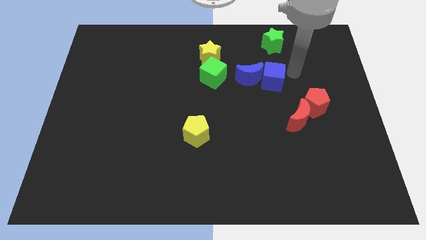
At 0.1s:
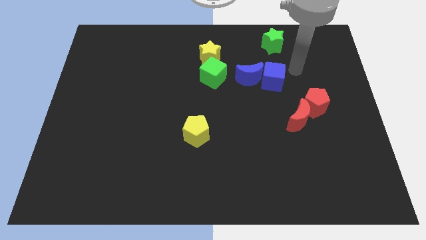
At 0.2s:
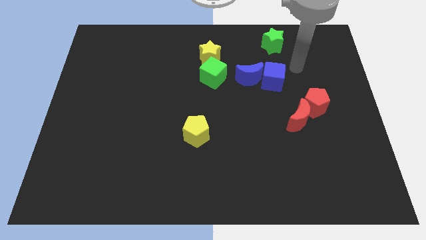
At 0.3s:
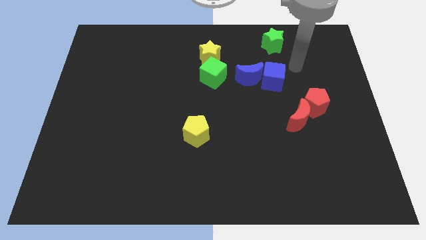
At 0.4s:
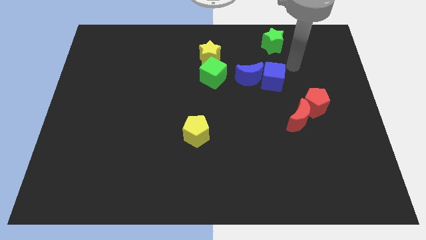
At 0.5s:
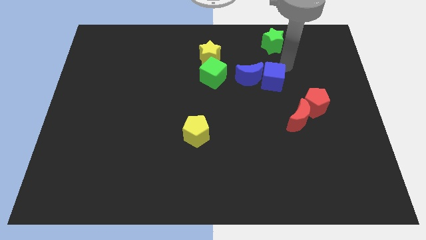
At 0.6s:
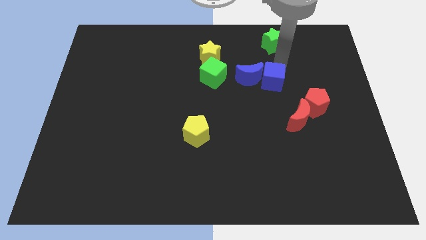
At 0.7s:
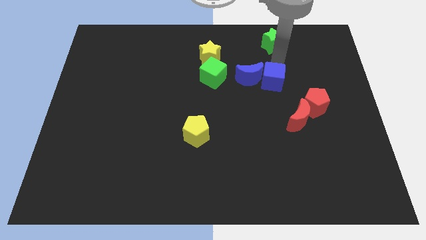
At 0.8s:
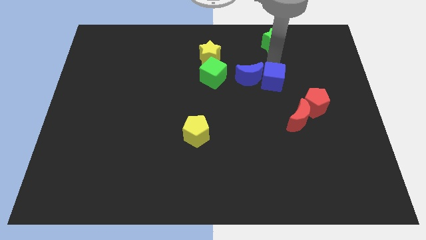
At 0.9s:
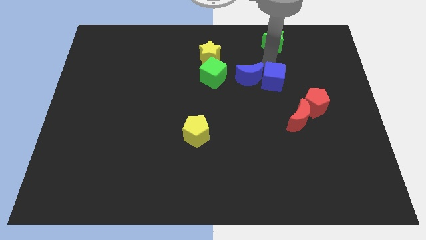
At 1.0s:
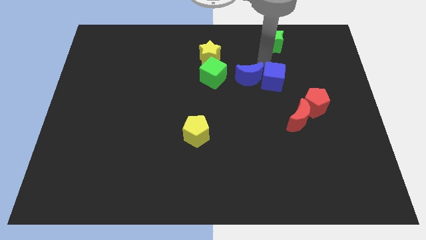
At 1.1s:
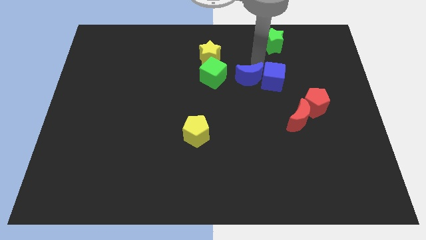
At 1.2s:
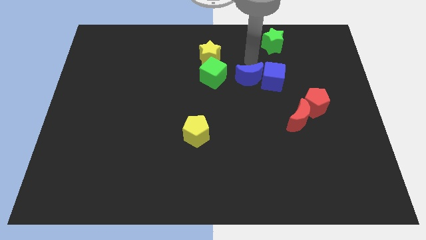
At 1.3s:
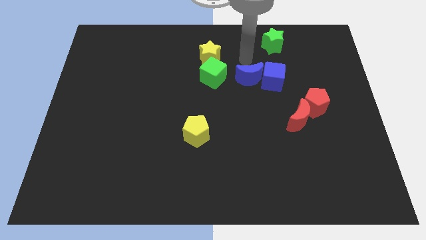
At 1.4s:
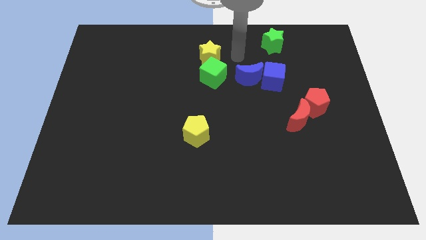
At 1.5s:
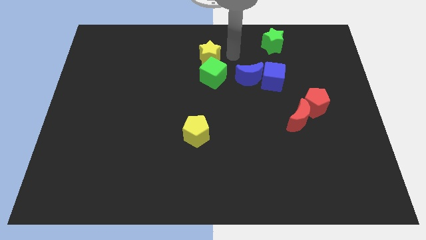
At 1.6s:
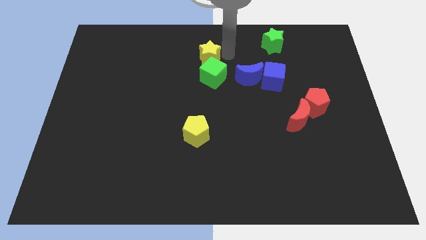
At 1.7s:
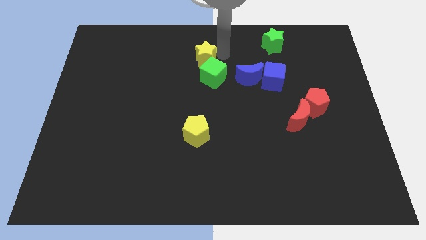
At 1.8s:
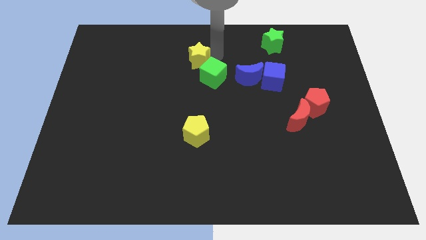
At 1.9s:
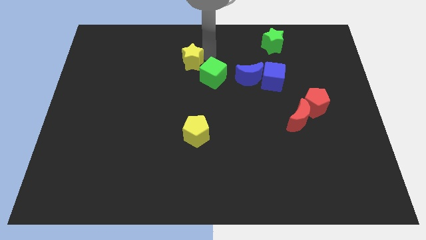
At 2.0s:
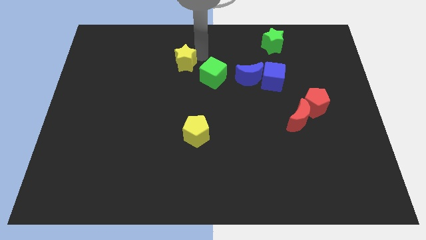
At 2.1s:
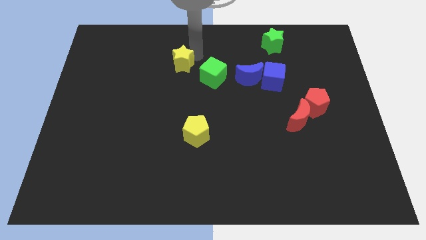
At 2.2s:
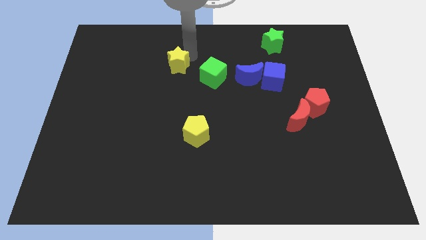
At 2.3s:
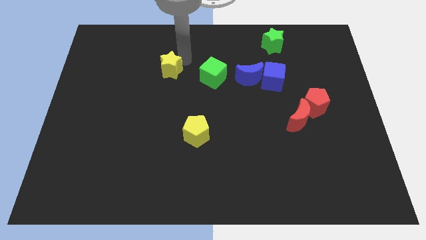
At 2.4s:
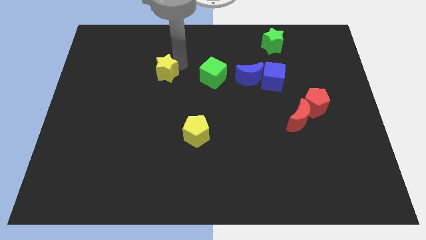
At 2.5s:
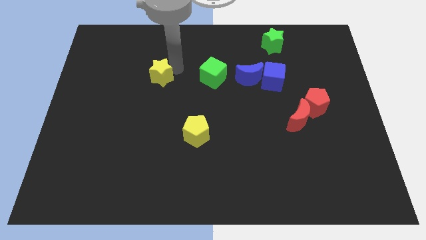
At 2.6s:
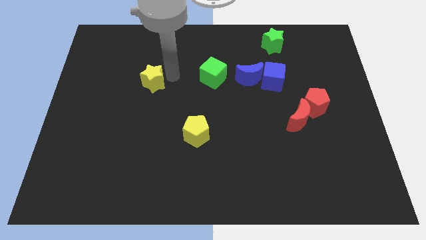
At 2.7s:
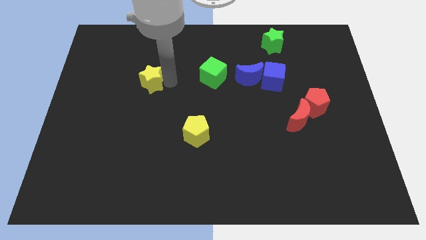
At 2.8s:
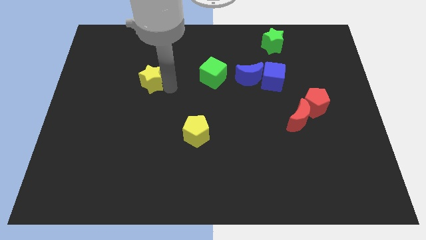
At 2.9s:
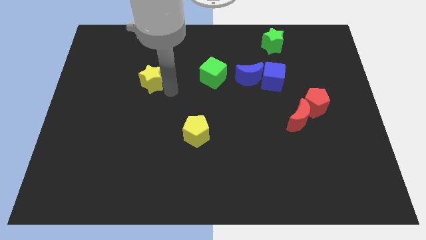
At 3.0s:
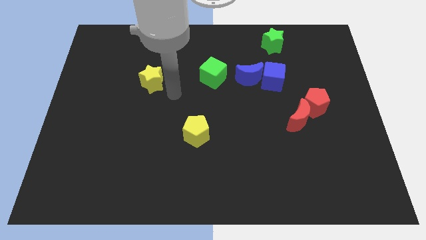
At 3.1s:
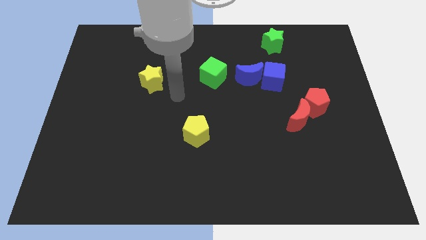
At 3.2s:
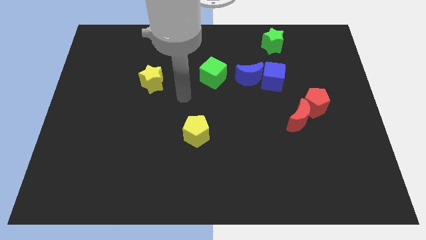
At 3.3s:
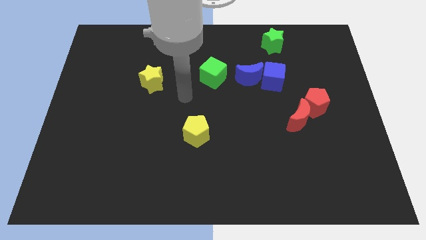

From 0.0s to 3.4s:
place yellow star parallel to green cube

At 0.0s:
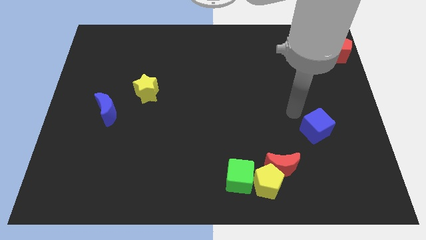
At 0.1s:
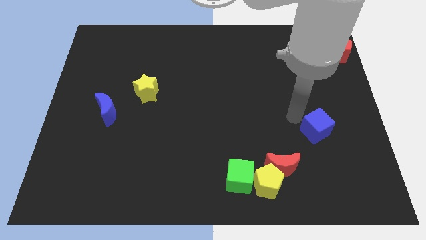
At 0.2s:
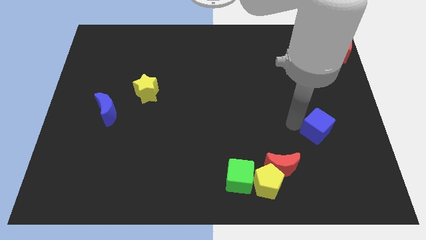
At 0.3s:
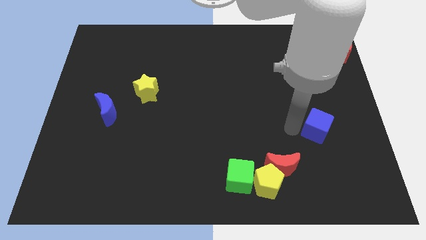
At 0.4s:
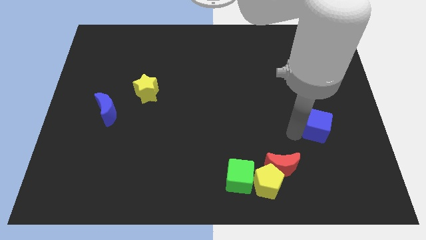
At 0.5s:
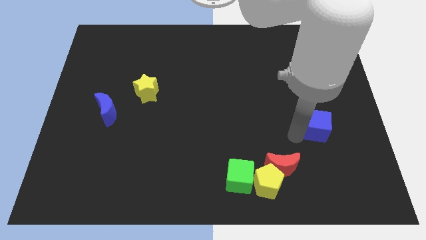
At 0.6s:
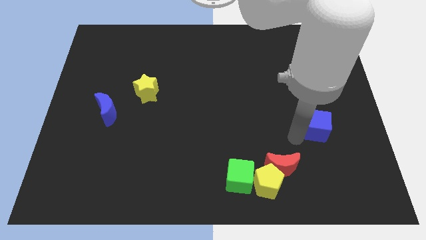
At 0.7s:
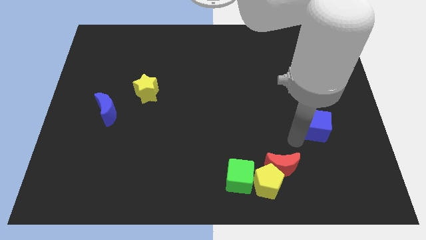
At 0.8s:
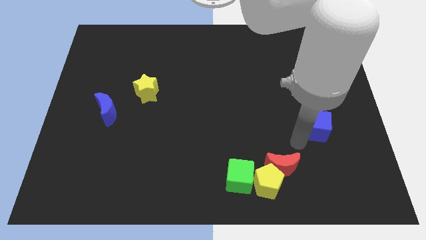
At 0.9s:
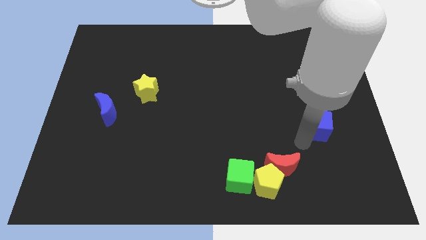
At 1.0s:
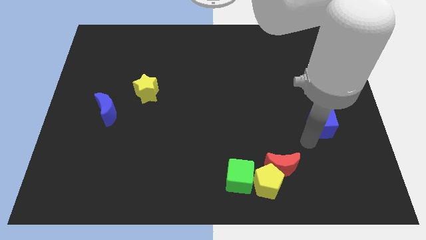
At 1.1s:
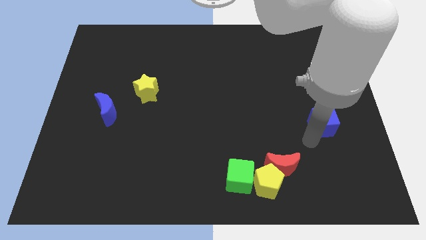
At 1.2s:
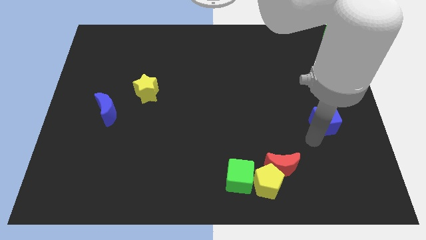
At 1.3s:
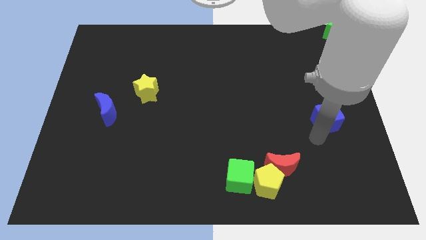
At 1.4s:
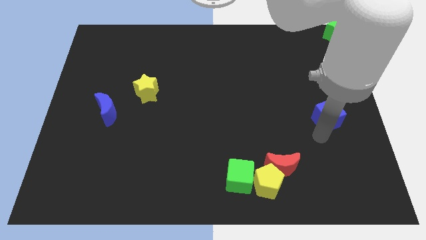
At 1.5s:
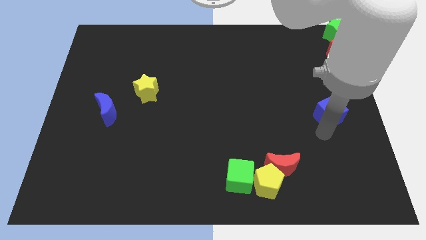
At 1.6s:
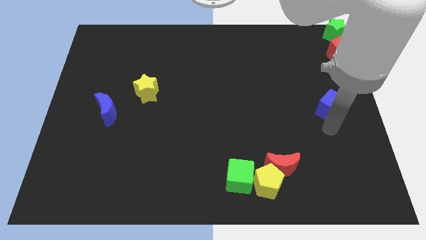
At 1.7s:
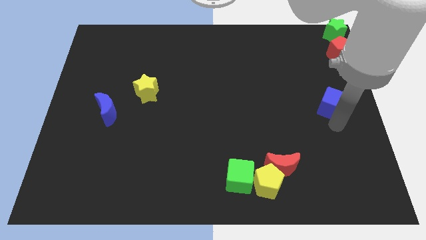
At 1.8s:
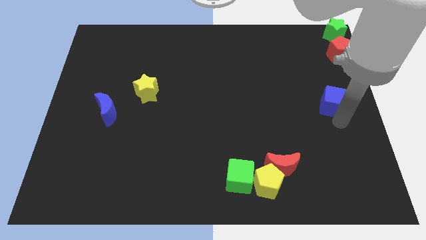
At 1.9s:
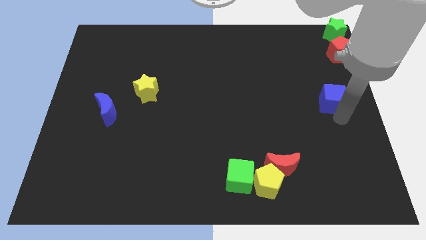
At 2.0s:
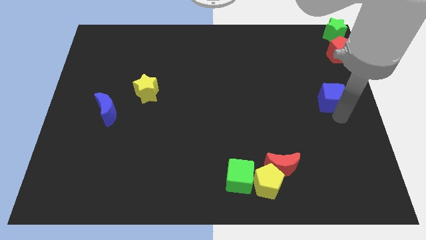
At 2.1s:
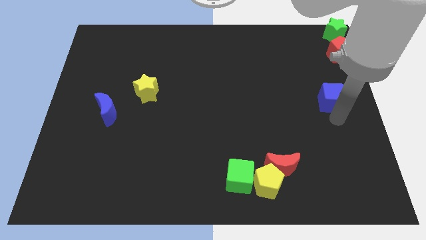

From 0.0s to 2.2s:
push the blue cube vertical to the red pentagon

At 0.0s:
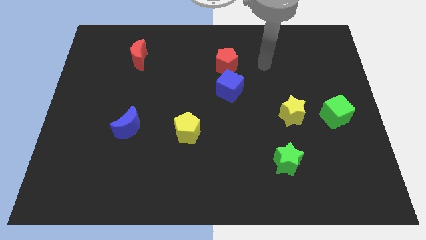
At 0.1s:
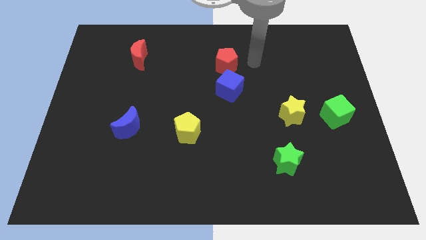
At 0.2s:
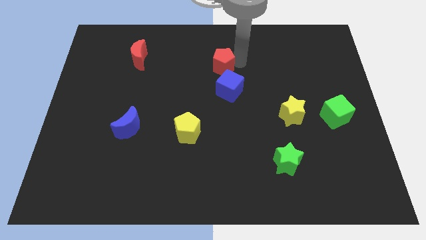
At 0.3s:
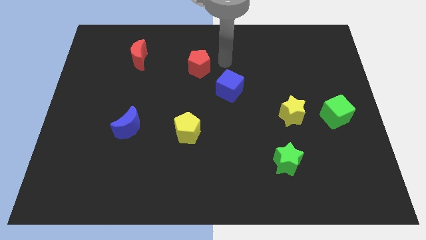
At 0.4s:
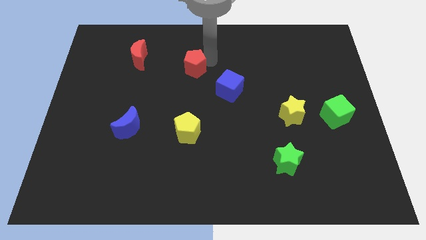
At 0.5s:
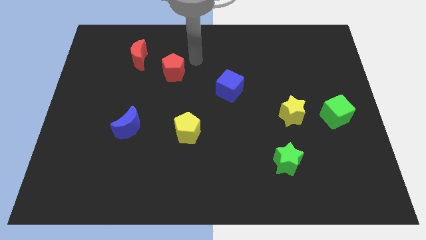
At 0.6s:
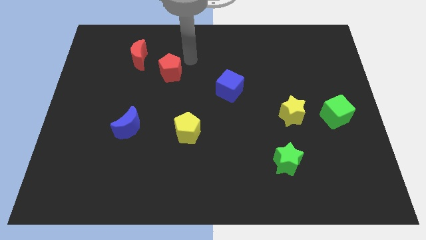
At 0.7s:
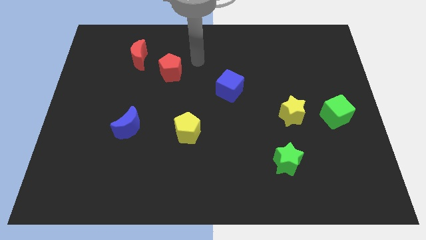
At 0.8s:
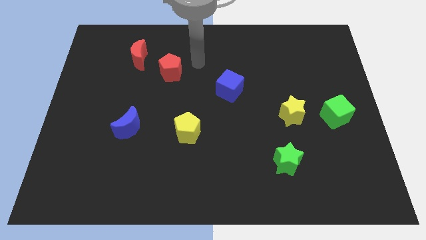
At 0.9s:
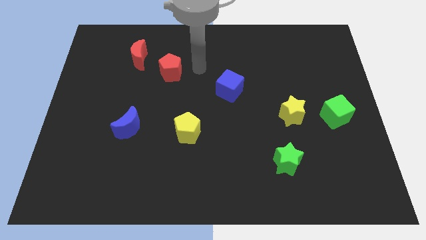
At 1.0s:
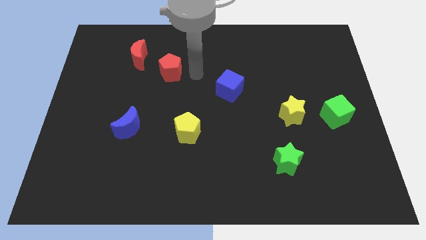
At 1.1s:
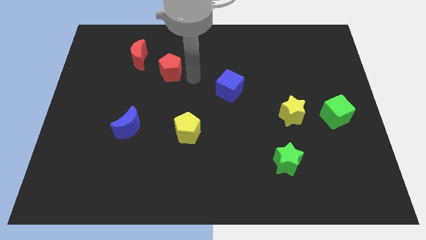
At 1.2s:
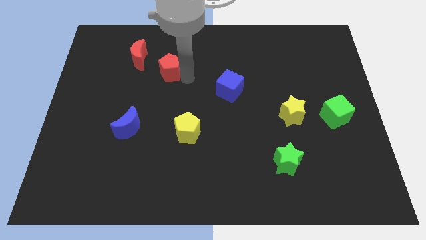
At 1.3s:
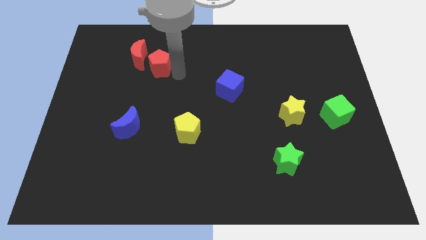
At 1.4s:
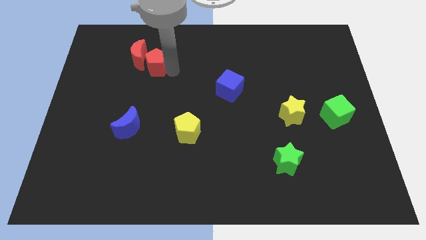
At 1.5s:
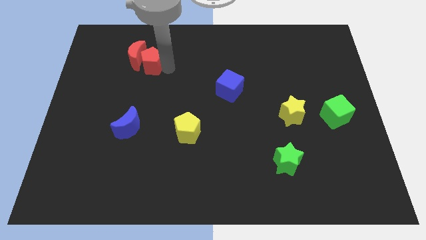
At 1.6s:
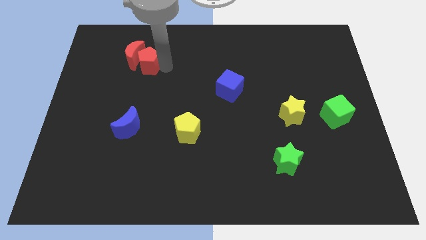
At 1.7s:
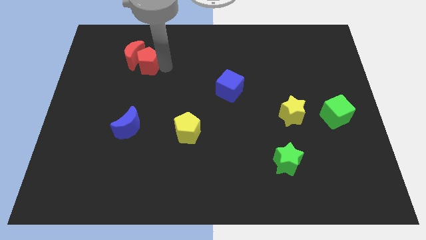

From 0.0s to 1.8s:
move the red pentagon into the red moon

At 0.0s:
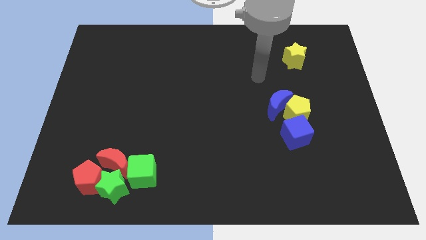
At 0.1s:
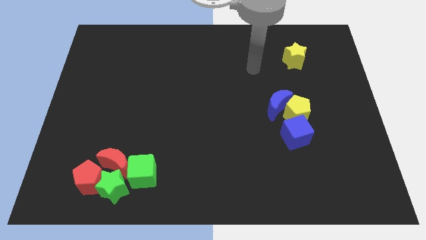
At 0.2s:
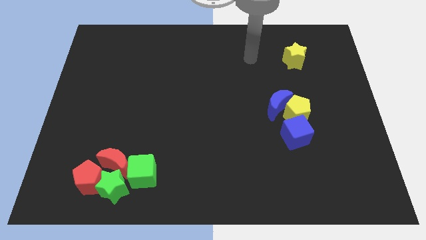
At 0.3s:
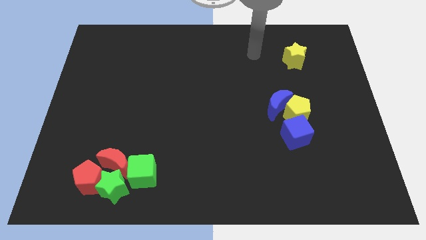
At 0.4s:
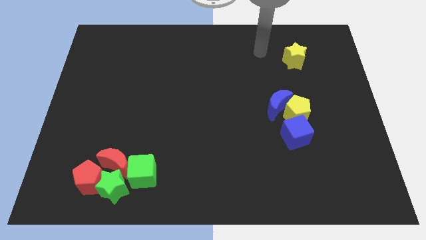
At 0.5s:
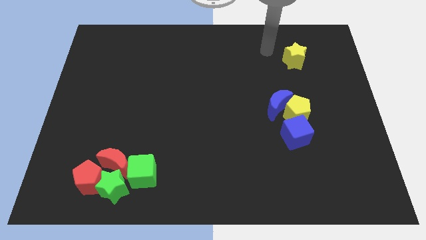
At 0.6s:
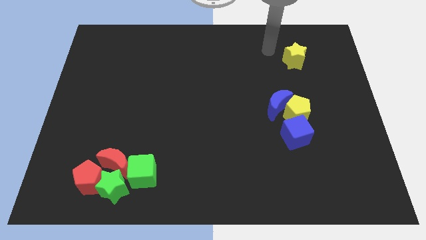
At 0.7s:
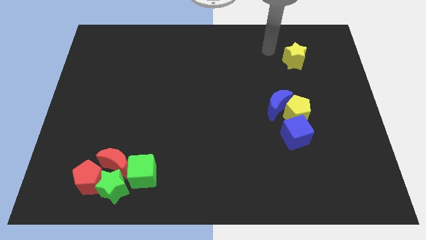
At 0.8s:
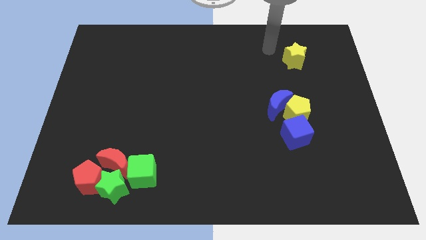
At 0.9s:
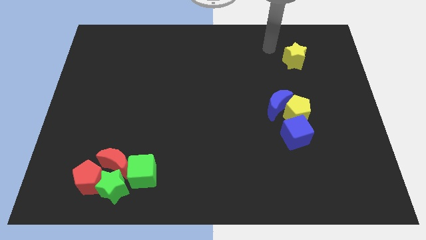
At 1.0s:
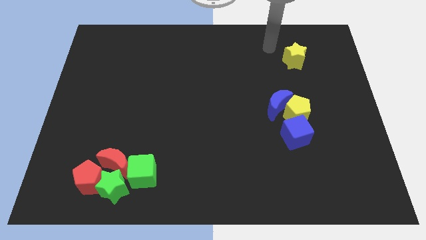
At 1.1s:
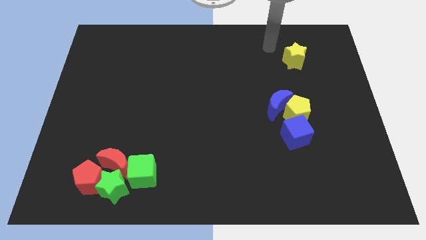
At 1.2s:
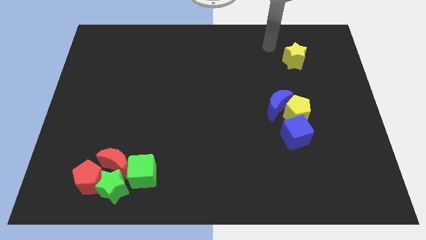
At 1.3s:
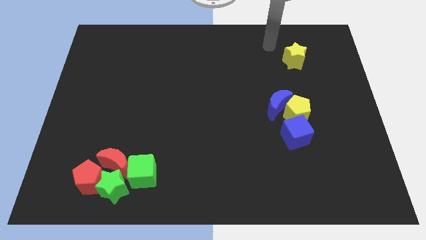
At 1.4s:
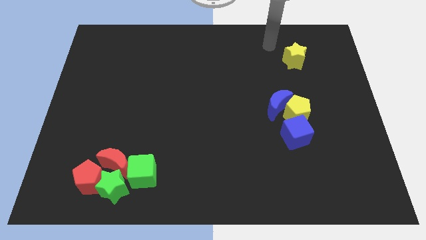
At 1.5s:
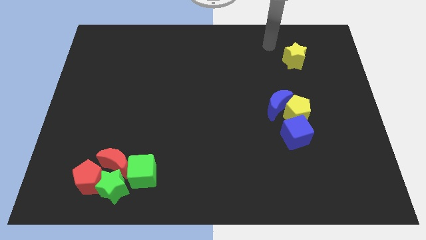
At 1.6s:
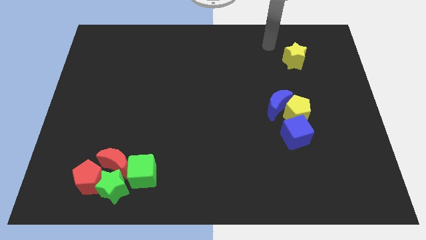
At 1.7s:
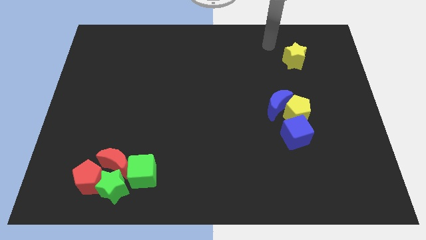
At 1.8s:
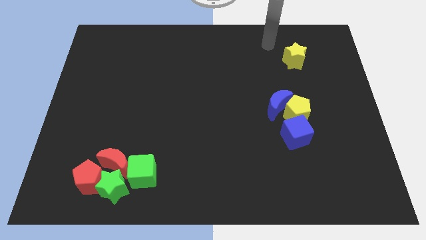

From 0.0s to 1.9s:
point your hand at the top left side of the yellow star
